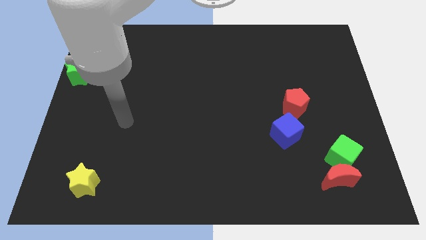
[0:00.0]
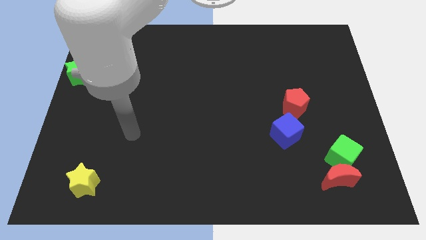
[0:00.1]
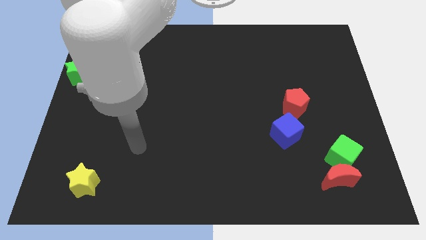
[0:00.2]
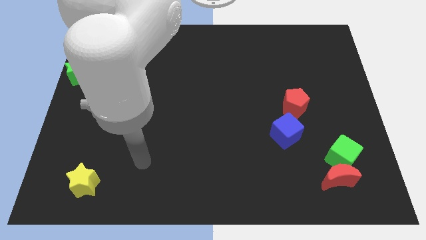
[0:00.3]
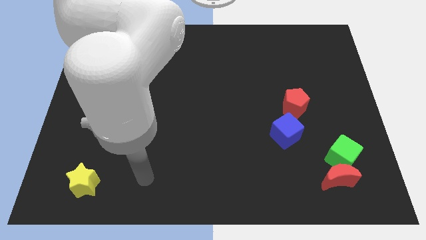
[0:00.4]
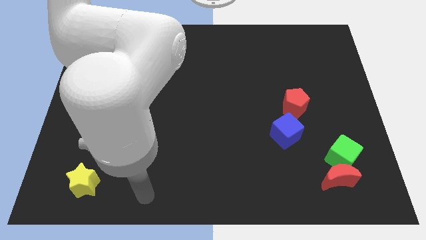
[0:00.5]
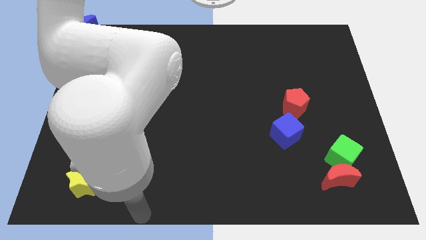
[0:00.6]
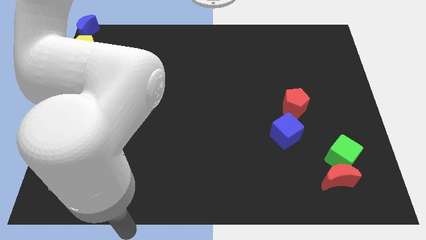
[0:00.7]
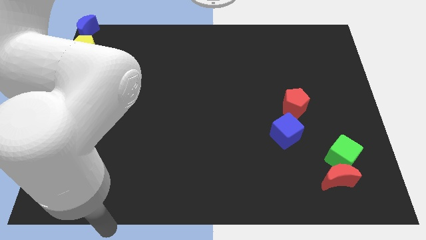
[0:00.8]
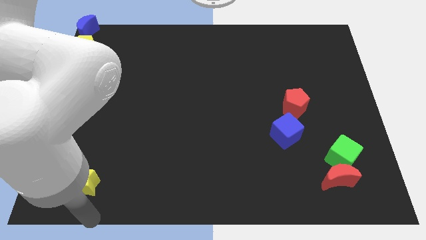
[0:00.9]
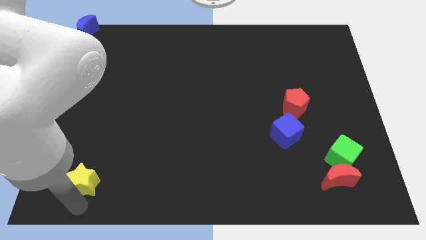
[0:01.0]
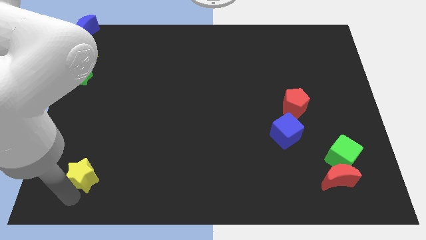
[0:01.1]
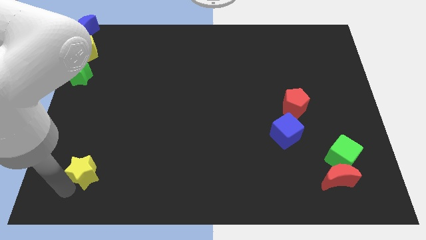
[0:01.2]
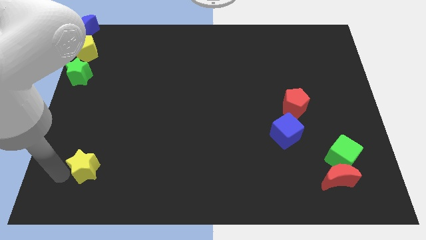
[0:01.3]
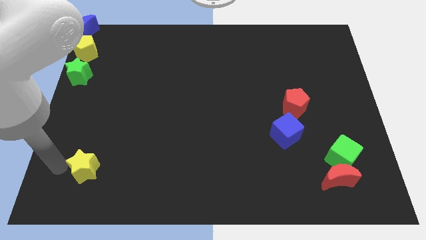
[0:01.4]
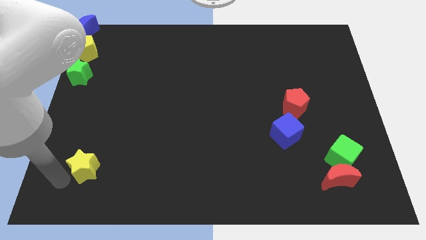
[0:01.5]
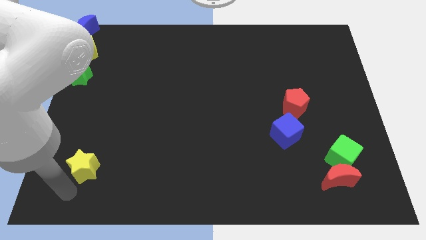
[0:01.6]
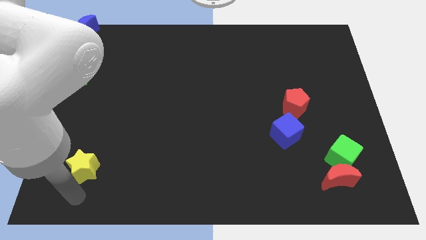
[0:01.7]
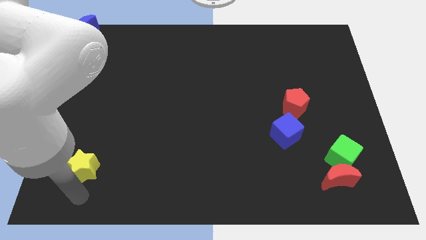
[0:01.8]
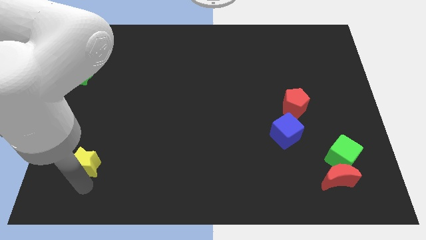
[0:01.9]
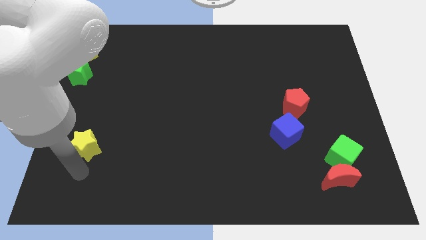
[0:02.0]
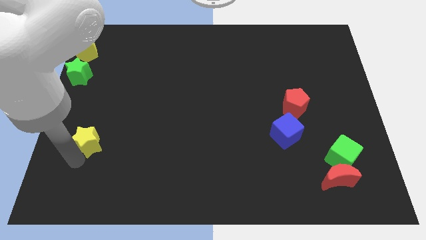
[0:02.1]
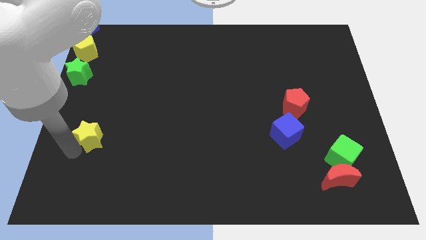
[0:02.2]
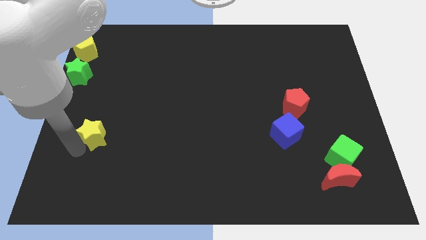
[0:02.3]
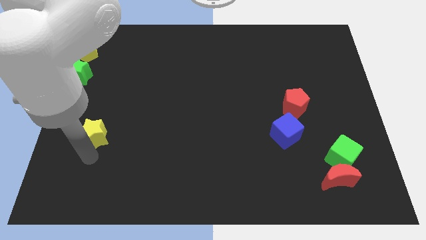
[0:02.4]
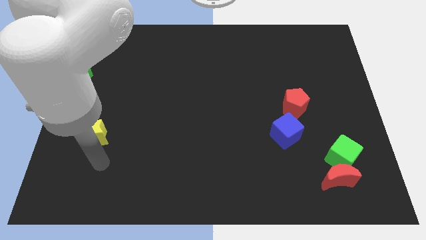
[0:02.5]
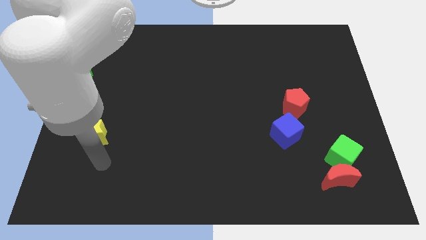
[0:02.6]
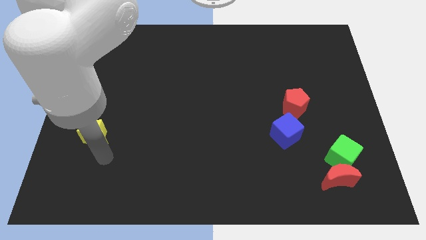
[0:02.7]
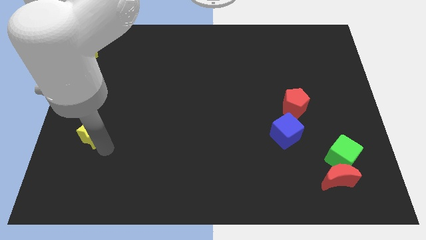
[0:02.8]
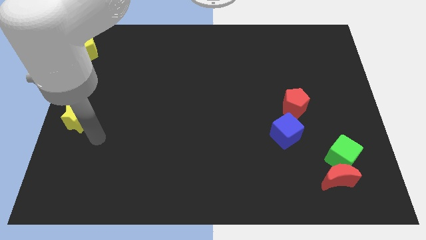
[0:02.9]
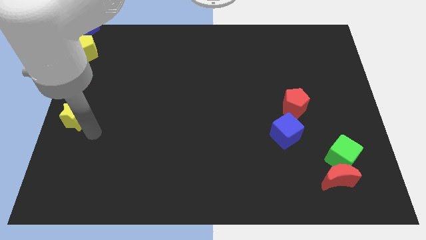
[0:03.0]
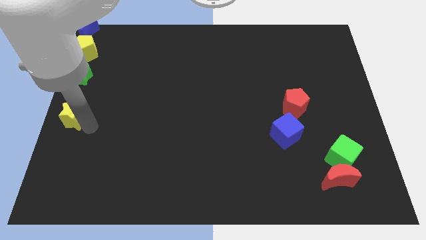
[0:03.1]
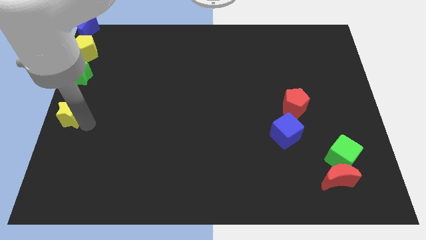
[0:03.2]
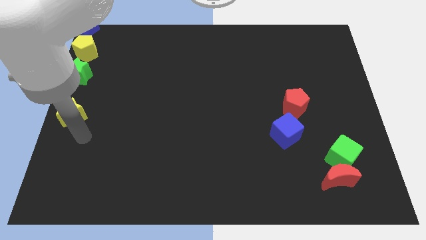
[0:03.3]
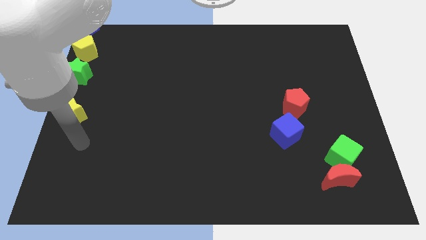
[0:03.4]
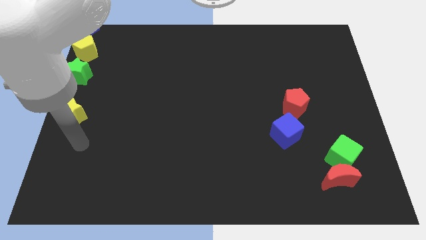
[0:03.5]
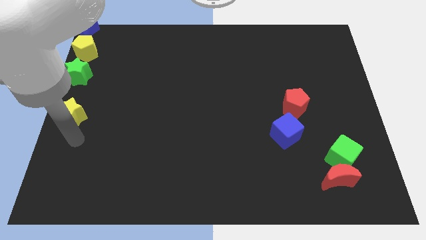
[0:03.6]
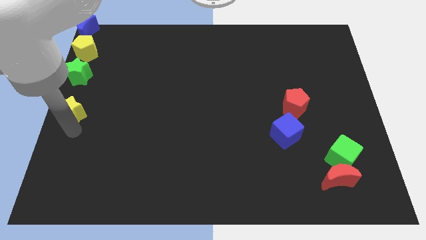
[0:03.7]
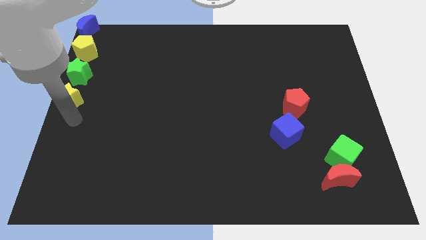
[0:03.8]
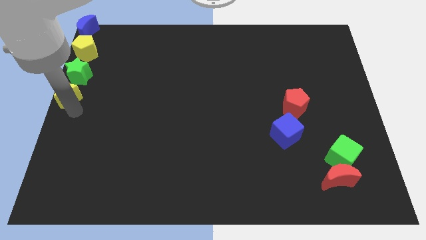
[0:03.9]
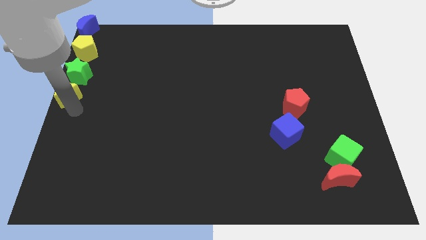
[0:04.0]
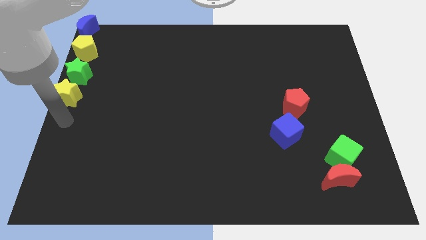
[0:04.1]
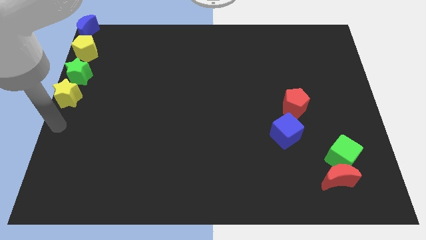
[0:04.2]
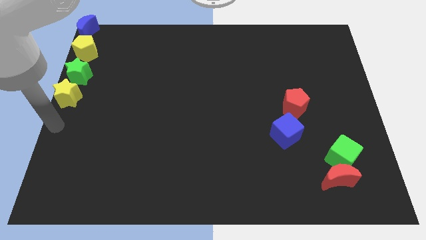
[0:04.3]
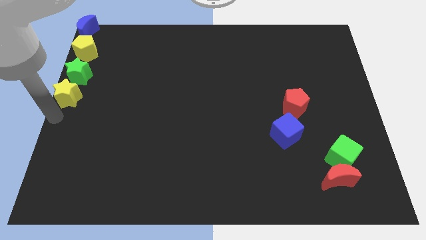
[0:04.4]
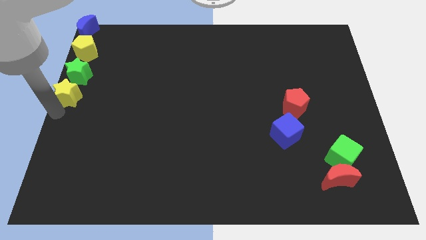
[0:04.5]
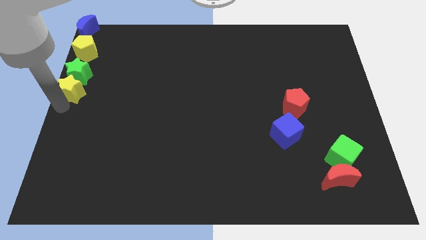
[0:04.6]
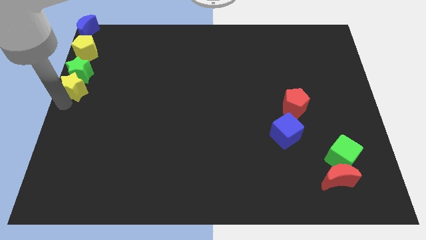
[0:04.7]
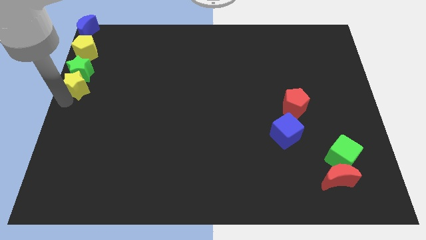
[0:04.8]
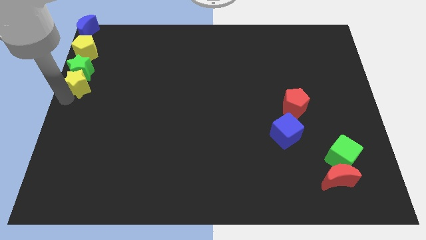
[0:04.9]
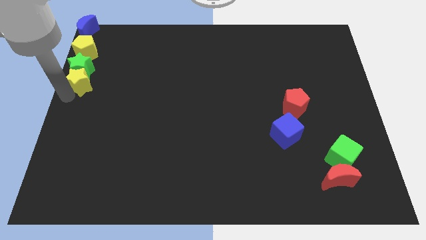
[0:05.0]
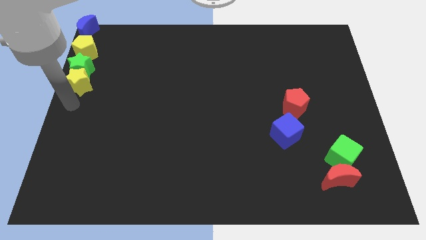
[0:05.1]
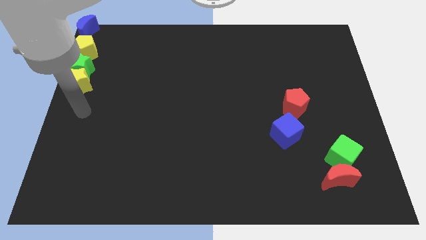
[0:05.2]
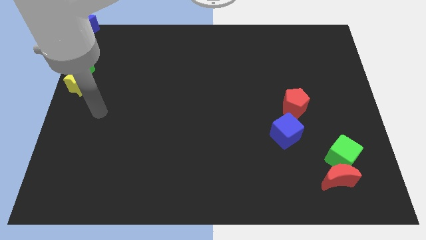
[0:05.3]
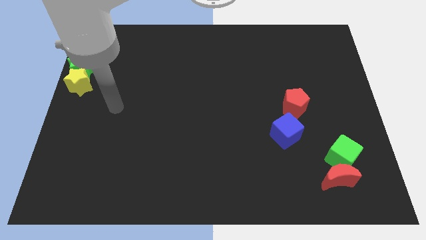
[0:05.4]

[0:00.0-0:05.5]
push the yellow star to the bottom of the green star

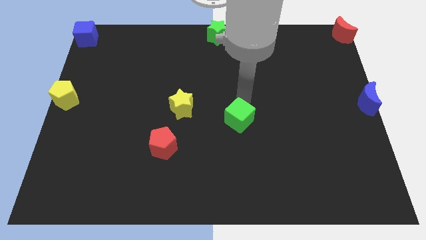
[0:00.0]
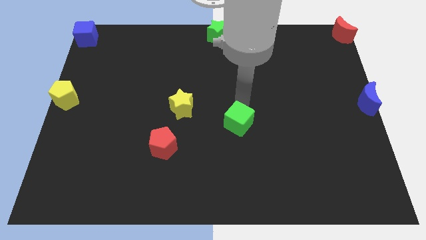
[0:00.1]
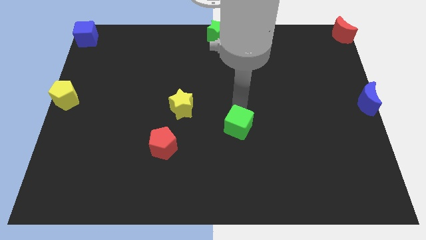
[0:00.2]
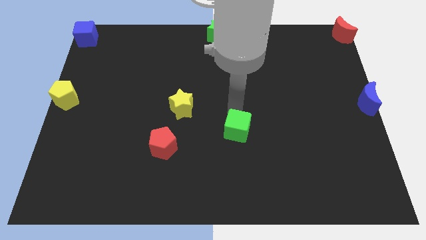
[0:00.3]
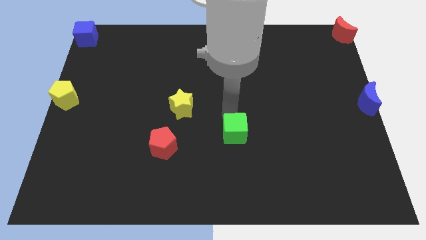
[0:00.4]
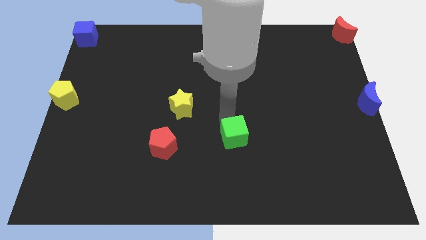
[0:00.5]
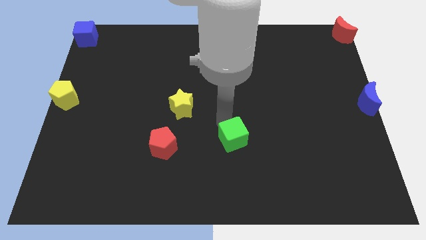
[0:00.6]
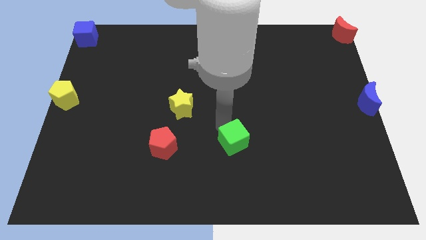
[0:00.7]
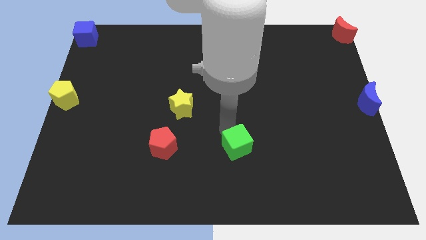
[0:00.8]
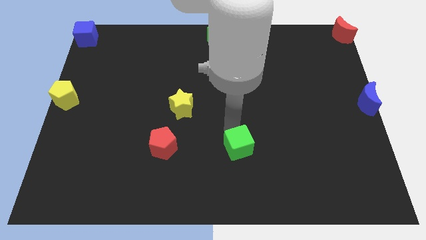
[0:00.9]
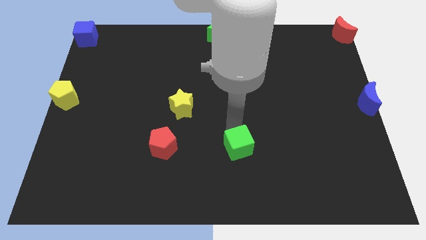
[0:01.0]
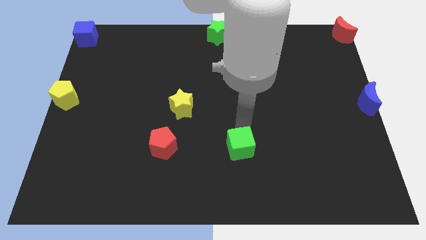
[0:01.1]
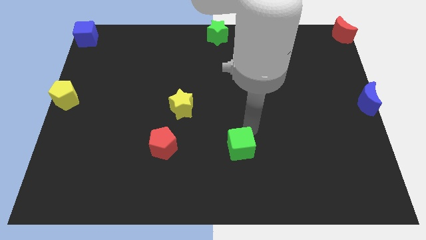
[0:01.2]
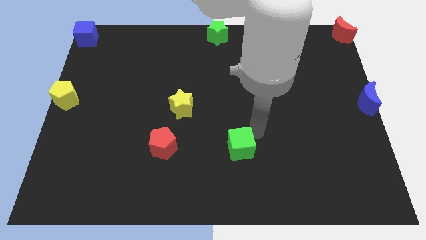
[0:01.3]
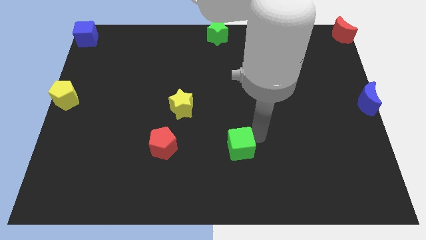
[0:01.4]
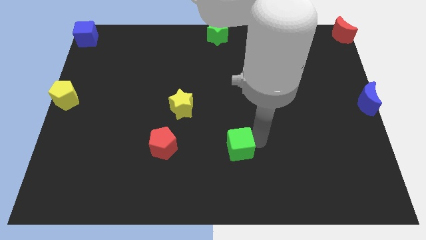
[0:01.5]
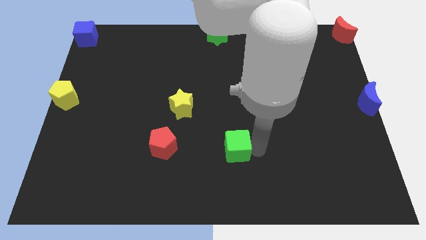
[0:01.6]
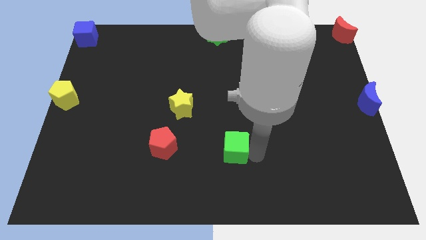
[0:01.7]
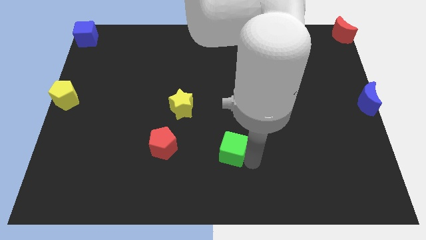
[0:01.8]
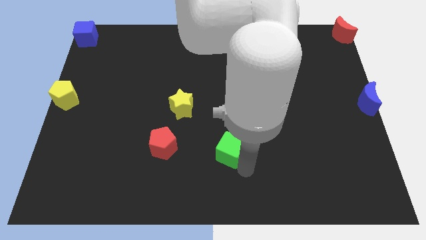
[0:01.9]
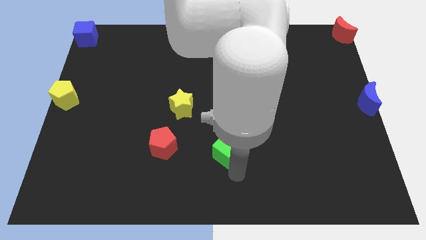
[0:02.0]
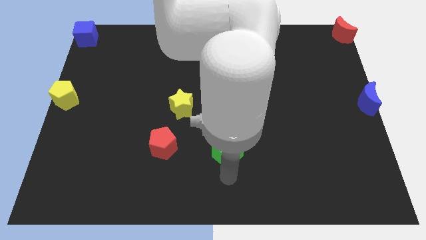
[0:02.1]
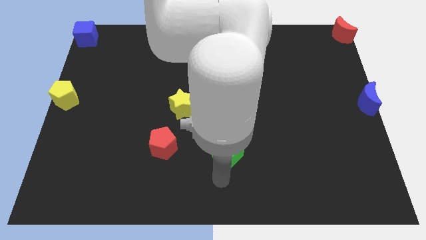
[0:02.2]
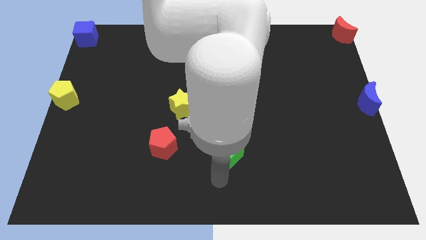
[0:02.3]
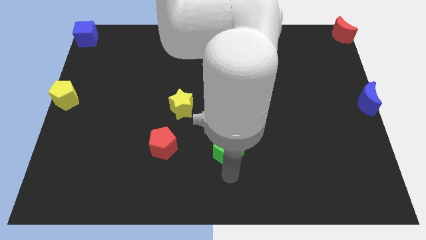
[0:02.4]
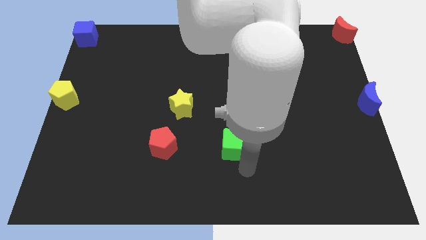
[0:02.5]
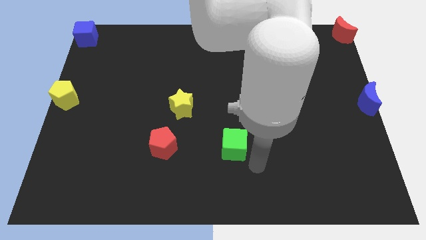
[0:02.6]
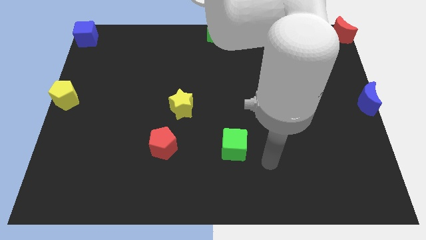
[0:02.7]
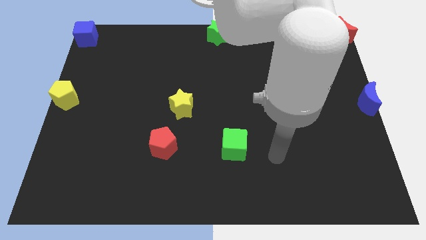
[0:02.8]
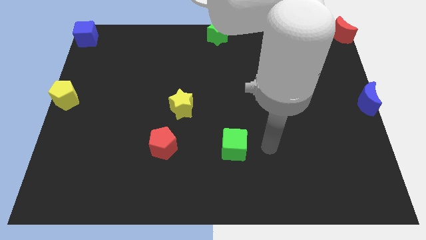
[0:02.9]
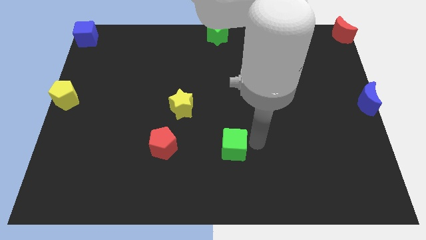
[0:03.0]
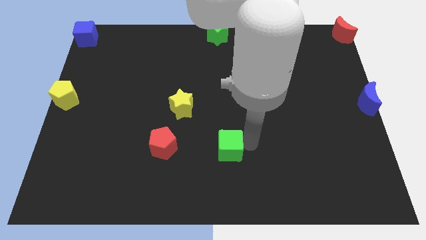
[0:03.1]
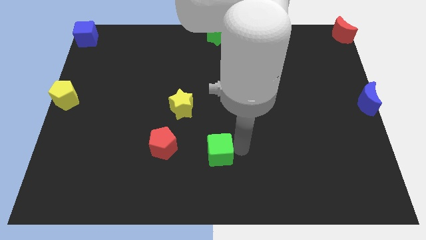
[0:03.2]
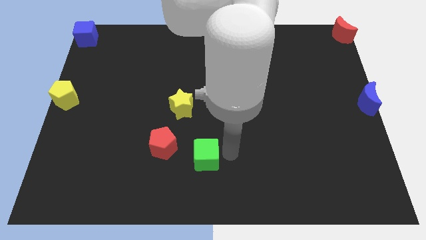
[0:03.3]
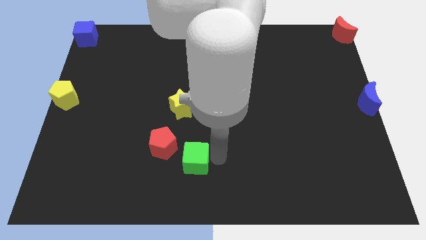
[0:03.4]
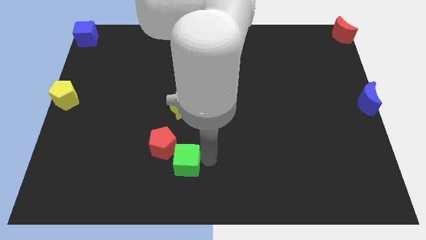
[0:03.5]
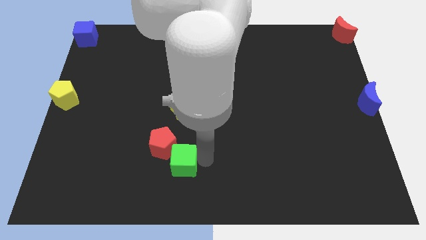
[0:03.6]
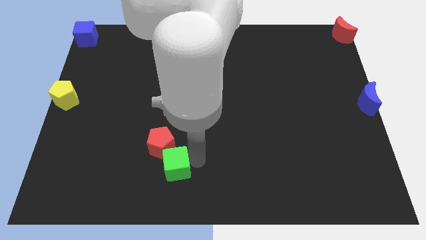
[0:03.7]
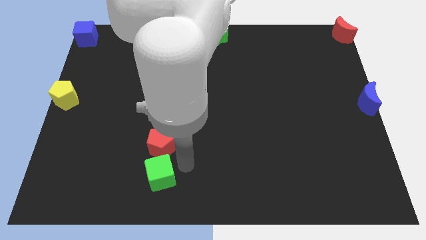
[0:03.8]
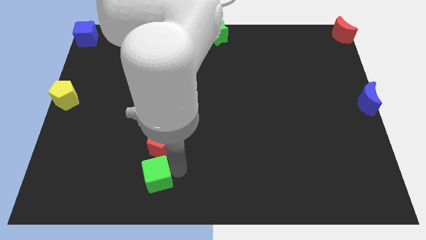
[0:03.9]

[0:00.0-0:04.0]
move green cube below the red pentagon
